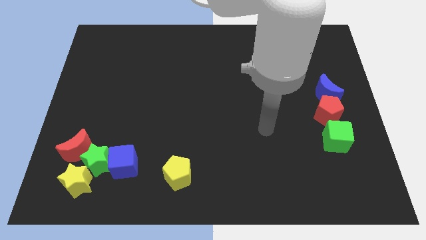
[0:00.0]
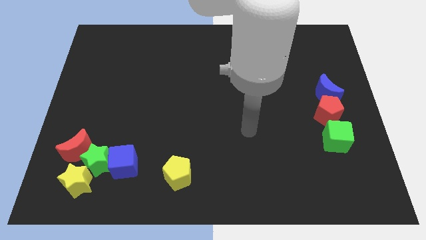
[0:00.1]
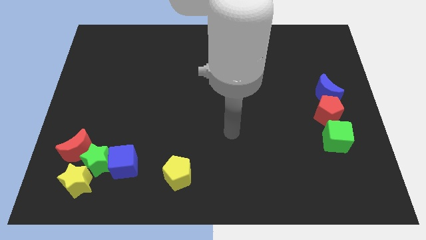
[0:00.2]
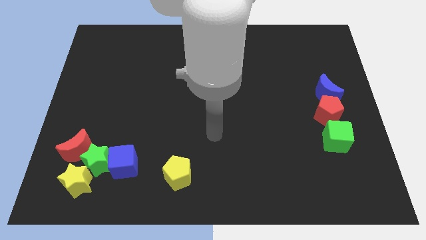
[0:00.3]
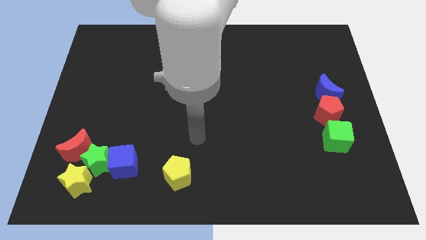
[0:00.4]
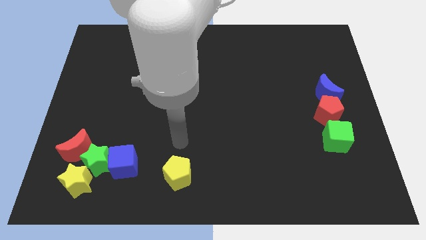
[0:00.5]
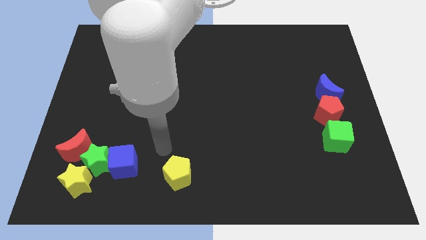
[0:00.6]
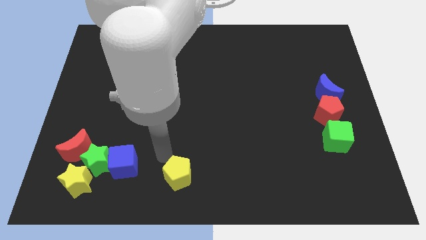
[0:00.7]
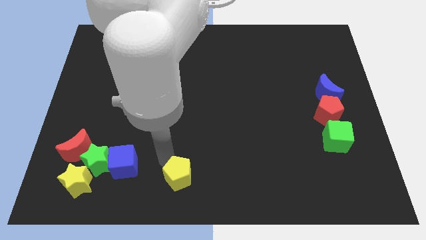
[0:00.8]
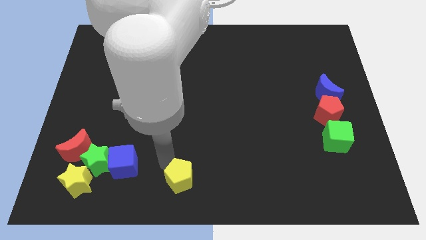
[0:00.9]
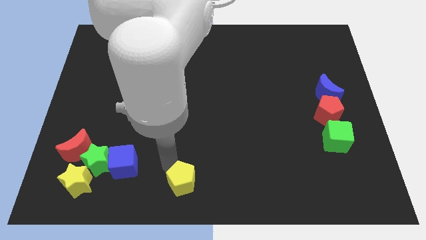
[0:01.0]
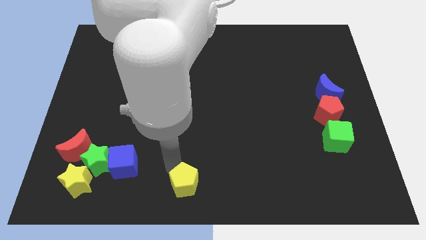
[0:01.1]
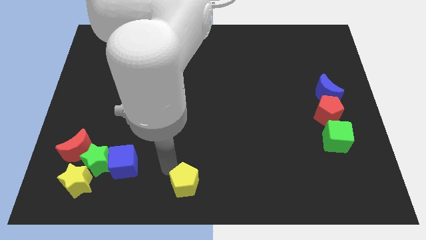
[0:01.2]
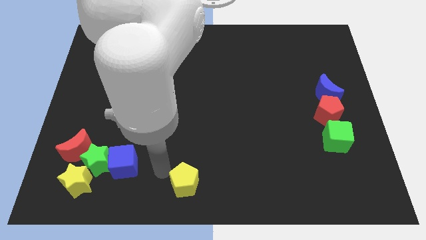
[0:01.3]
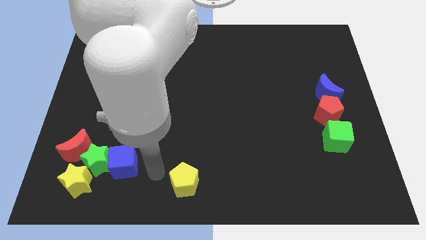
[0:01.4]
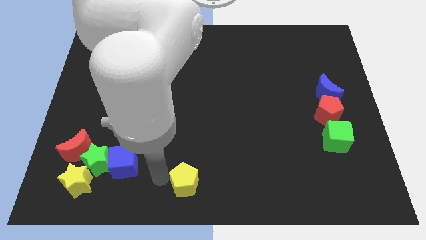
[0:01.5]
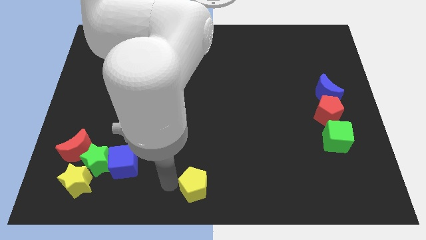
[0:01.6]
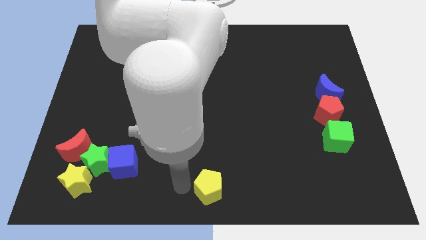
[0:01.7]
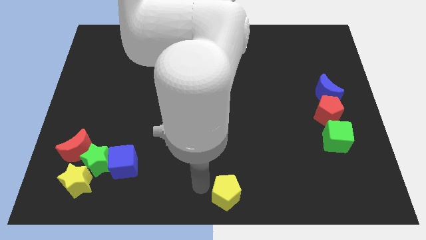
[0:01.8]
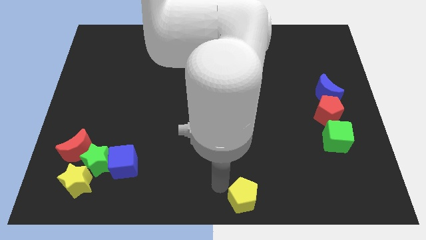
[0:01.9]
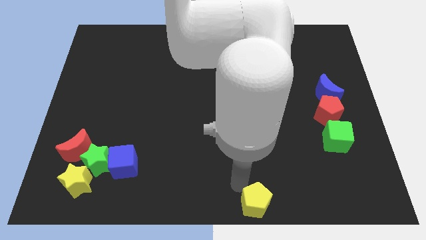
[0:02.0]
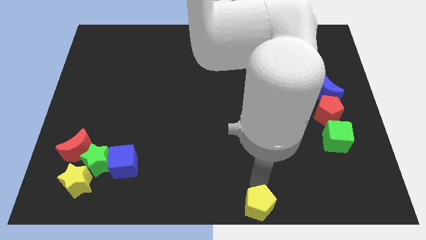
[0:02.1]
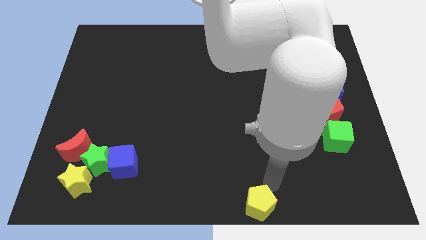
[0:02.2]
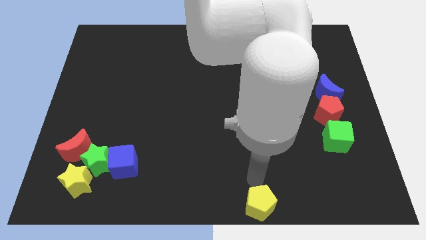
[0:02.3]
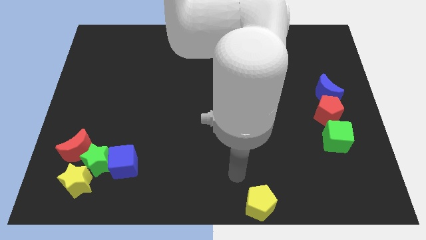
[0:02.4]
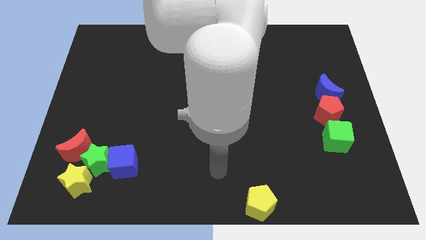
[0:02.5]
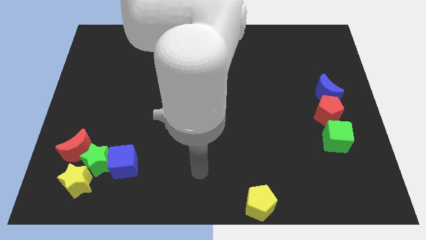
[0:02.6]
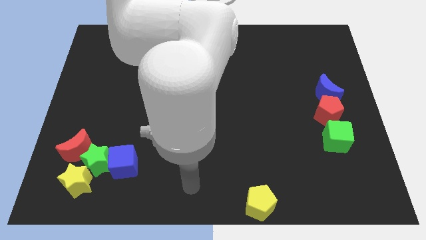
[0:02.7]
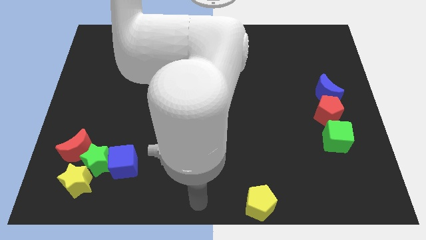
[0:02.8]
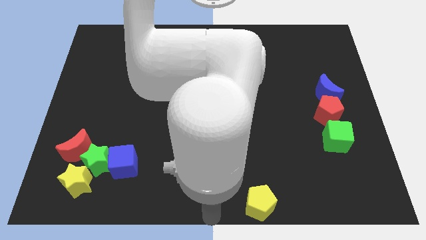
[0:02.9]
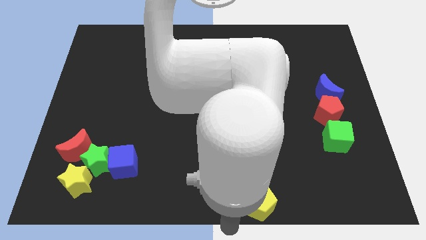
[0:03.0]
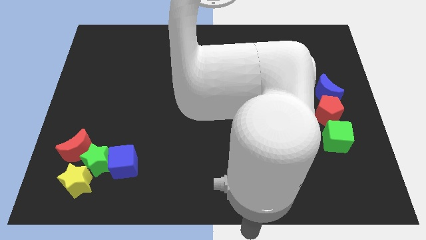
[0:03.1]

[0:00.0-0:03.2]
move yellow pentagon to the bottom middle

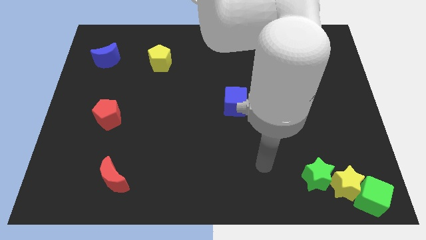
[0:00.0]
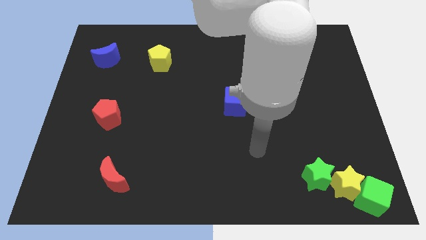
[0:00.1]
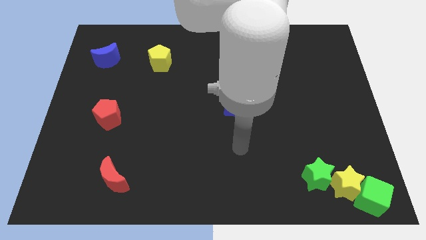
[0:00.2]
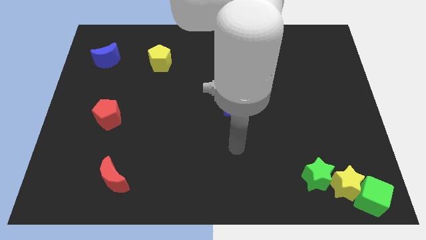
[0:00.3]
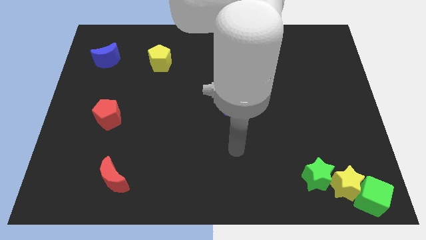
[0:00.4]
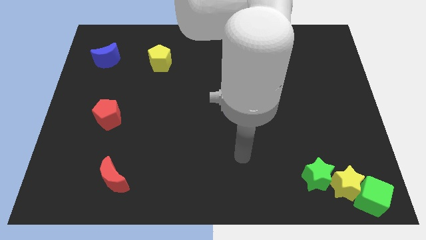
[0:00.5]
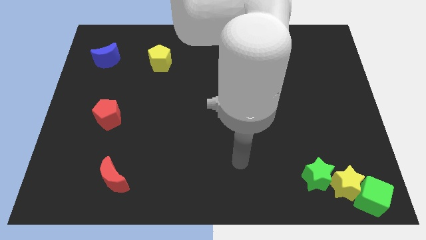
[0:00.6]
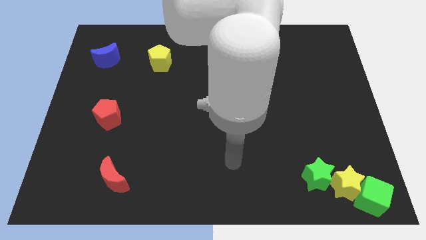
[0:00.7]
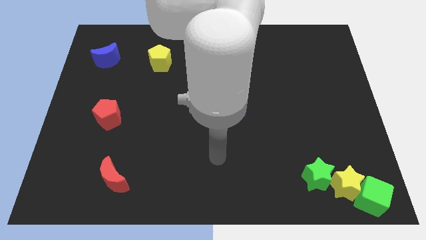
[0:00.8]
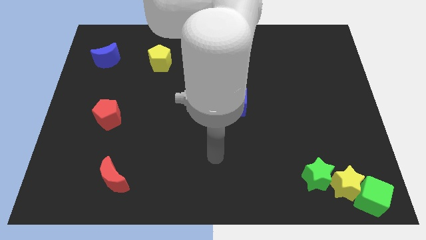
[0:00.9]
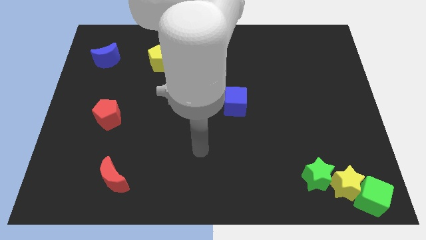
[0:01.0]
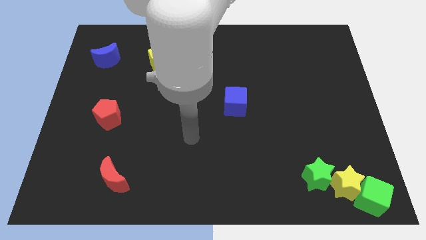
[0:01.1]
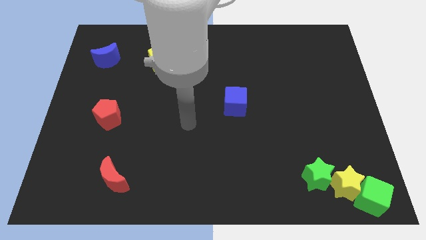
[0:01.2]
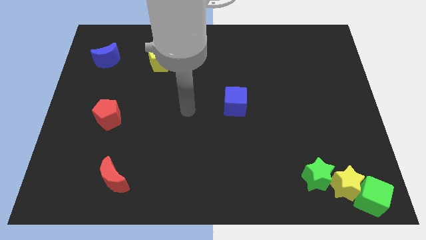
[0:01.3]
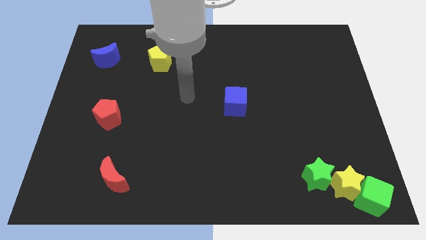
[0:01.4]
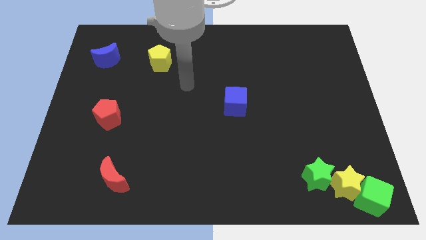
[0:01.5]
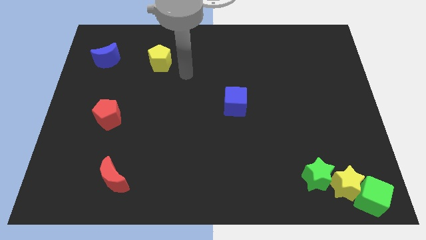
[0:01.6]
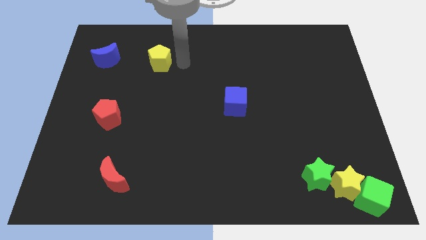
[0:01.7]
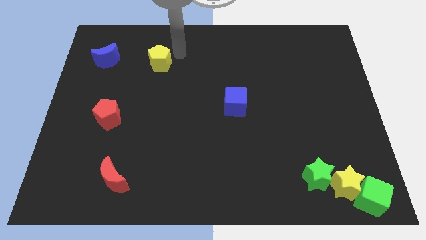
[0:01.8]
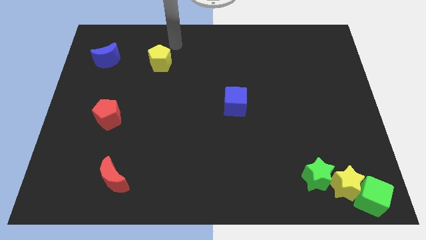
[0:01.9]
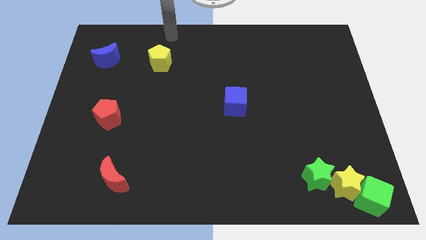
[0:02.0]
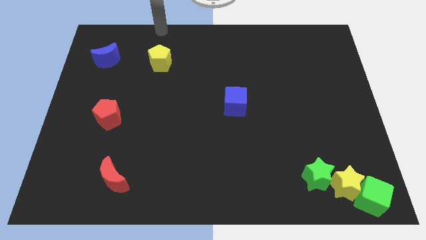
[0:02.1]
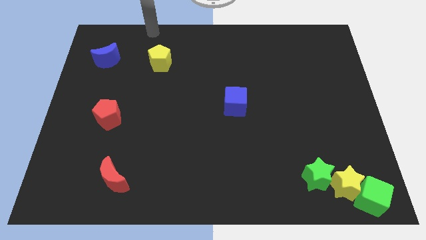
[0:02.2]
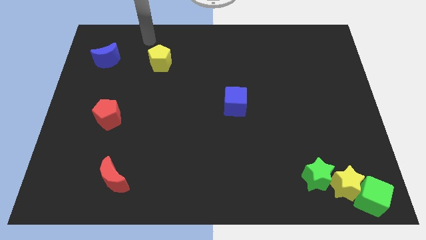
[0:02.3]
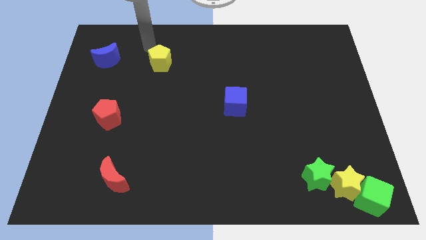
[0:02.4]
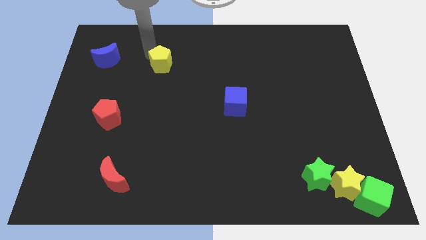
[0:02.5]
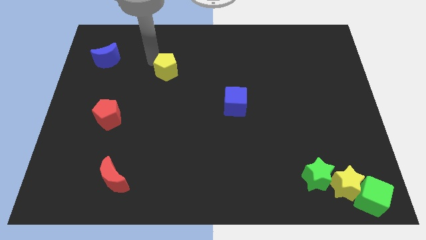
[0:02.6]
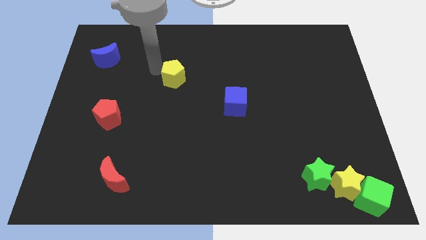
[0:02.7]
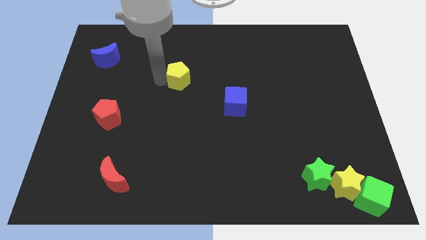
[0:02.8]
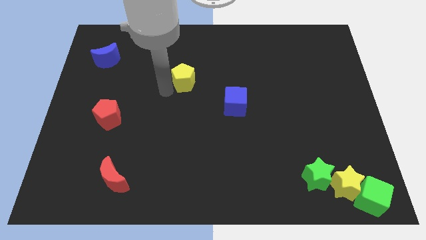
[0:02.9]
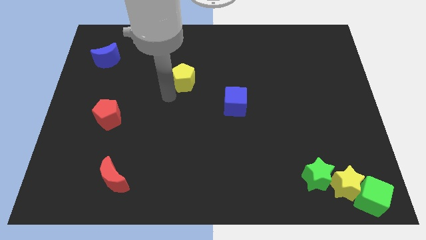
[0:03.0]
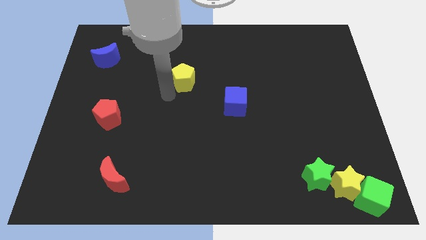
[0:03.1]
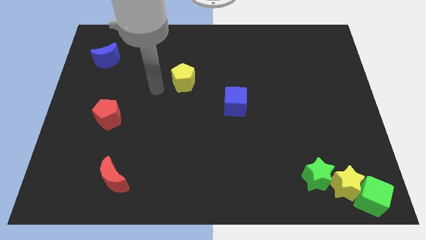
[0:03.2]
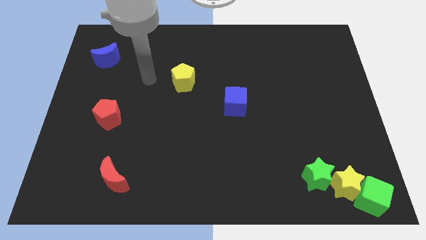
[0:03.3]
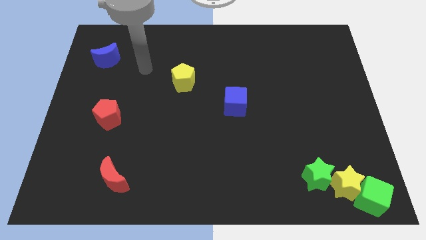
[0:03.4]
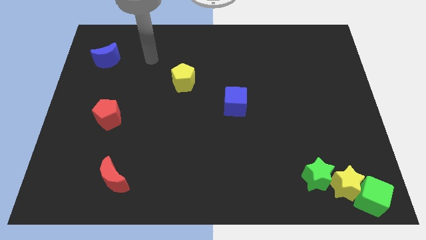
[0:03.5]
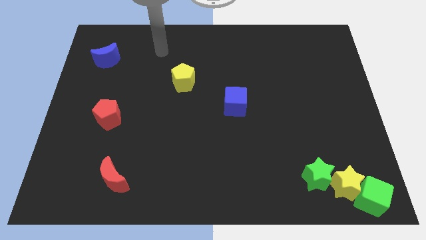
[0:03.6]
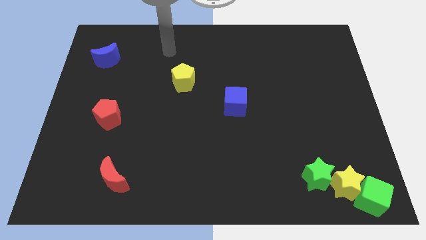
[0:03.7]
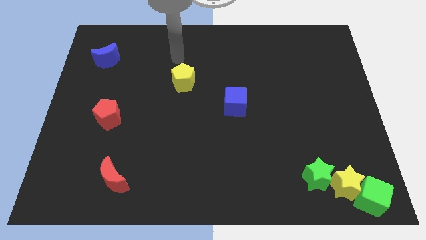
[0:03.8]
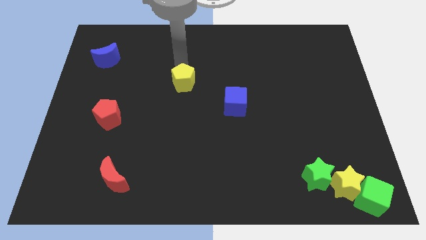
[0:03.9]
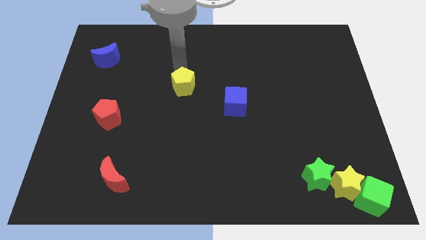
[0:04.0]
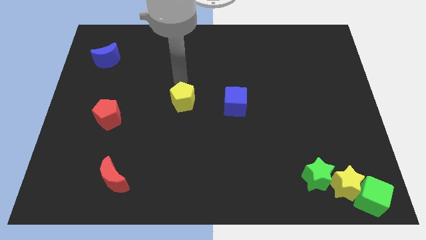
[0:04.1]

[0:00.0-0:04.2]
push the yellow pentagon to the left of the blue cube

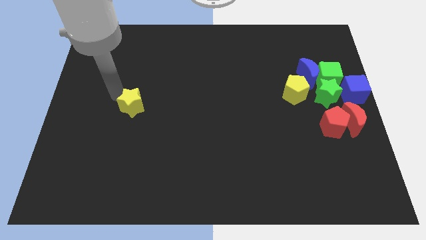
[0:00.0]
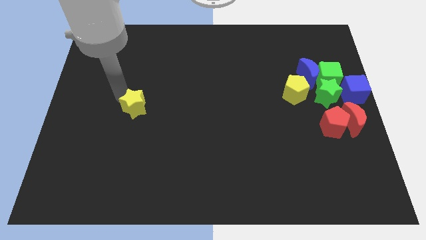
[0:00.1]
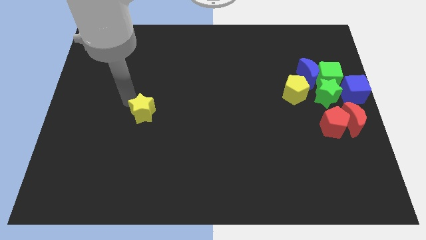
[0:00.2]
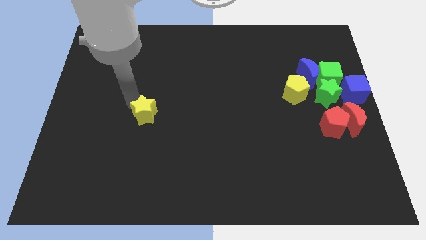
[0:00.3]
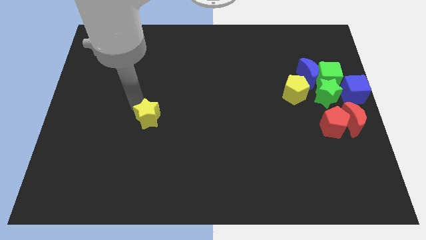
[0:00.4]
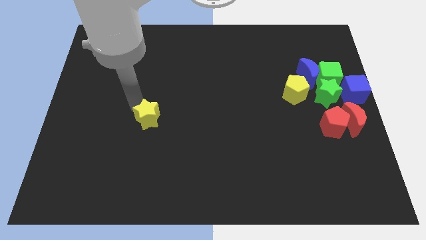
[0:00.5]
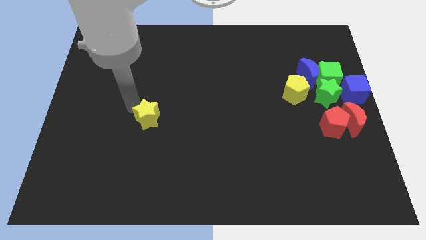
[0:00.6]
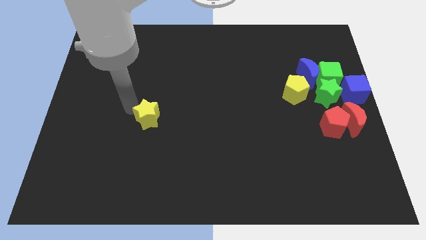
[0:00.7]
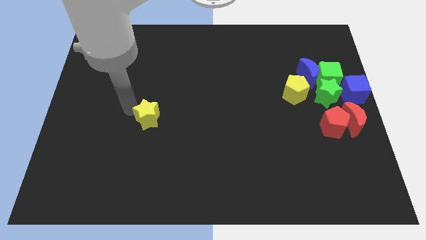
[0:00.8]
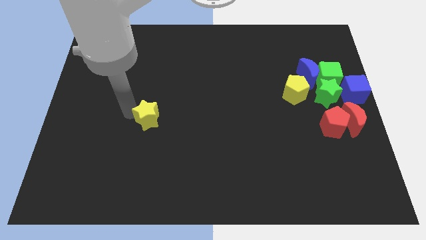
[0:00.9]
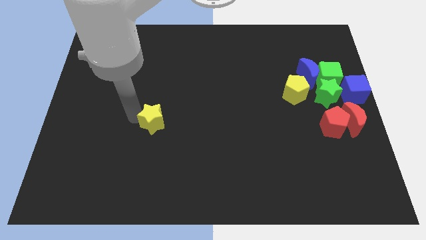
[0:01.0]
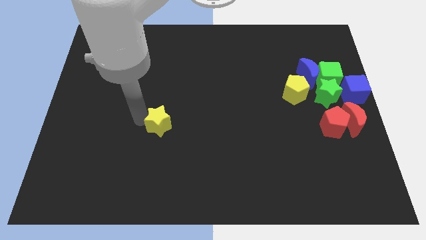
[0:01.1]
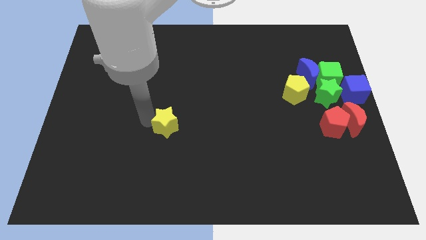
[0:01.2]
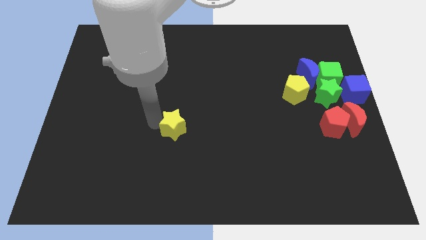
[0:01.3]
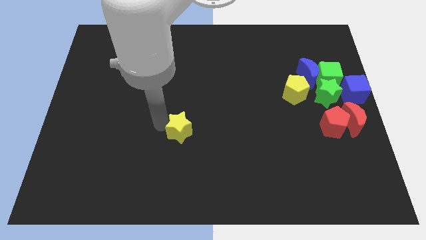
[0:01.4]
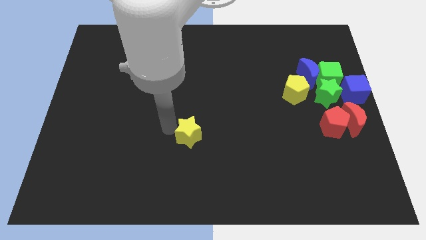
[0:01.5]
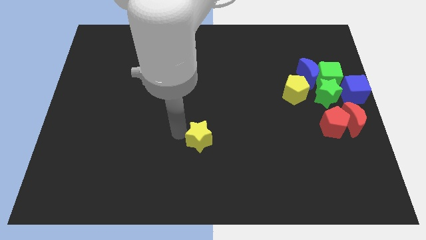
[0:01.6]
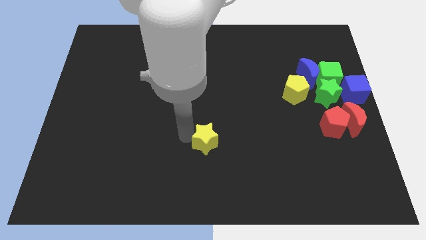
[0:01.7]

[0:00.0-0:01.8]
push the yellow star towards the bottom center of the board

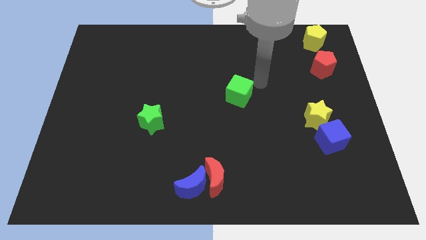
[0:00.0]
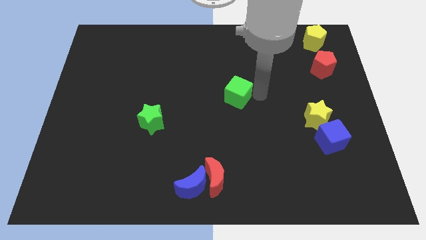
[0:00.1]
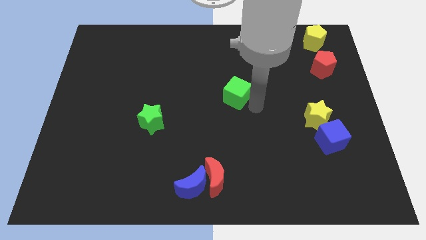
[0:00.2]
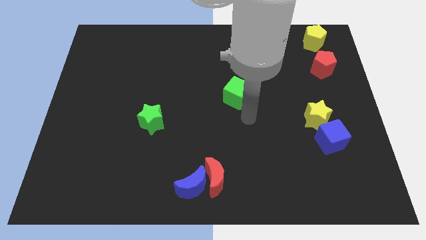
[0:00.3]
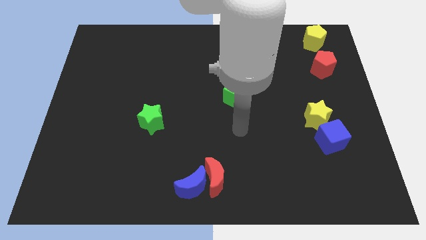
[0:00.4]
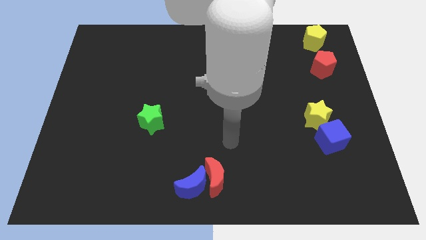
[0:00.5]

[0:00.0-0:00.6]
move the green cube slightly
